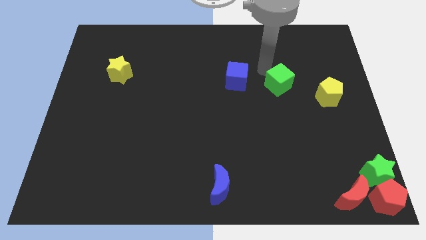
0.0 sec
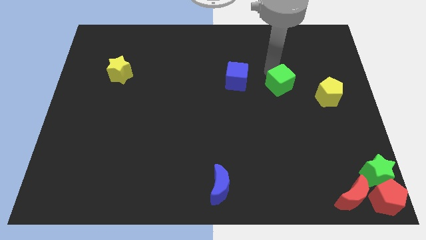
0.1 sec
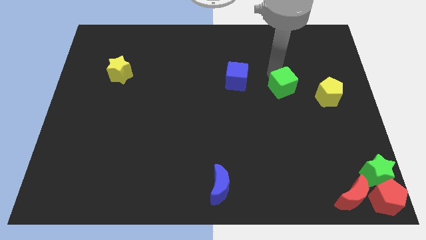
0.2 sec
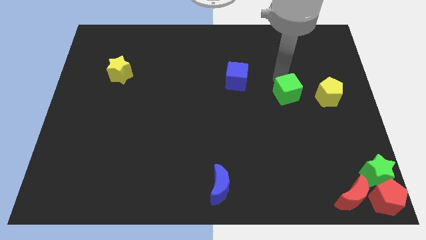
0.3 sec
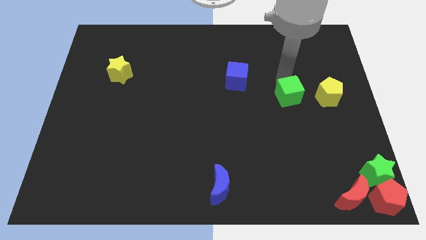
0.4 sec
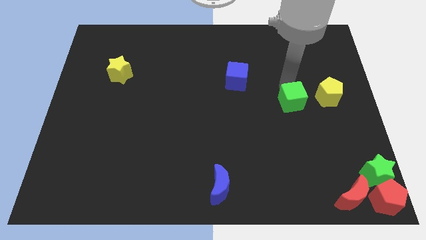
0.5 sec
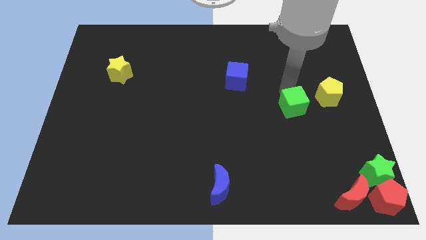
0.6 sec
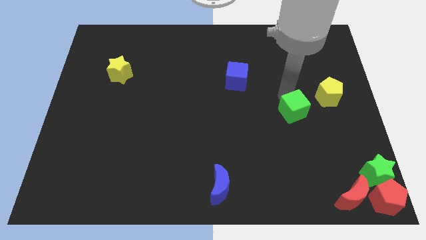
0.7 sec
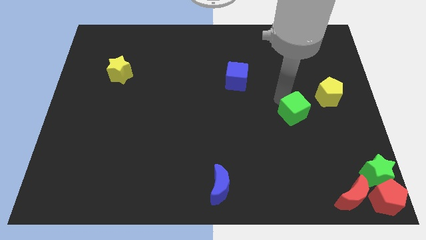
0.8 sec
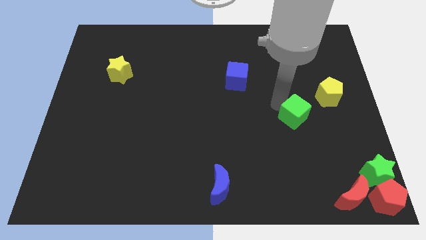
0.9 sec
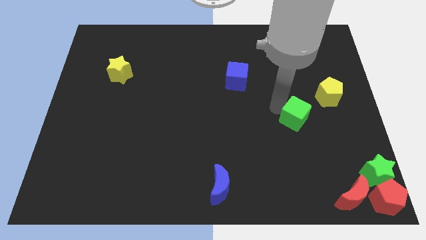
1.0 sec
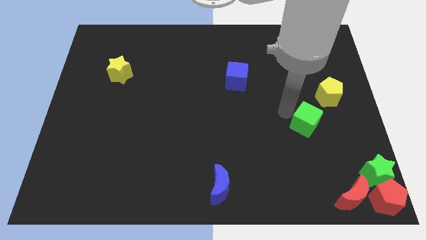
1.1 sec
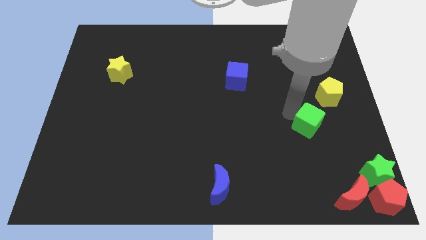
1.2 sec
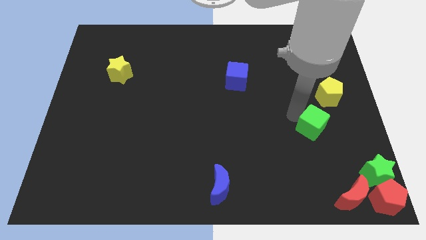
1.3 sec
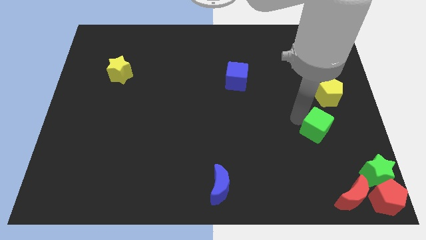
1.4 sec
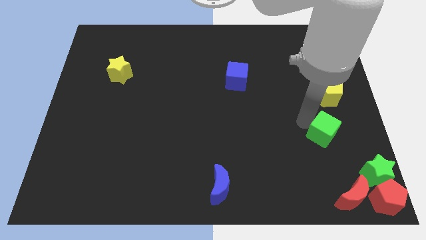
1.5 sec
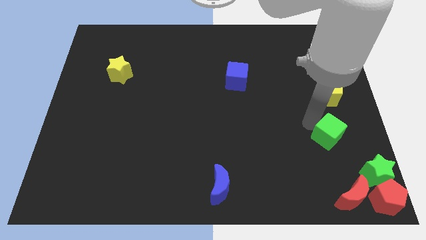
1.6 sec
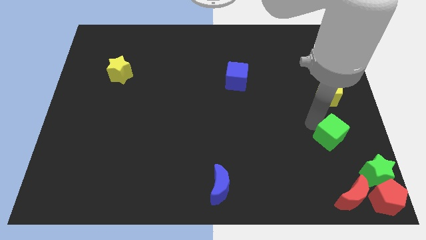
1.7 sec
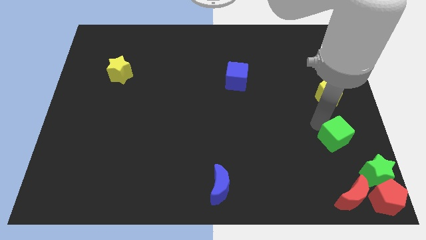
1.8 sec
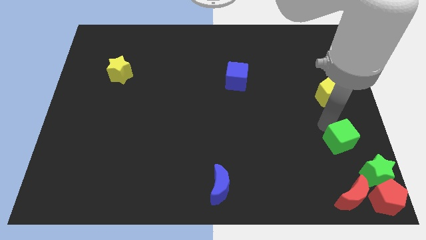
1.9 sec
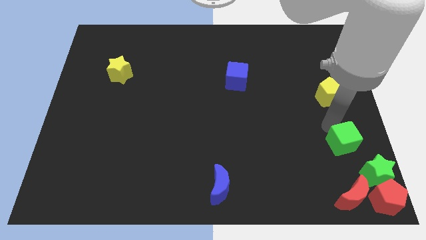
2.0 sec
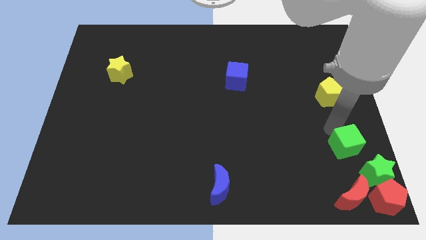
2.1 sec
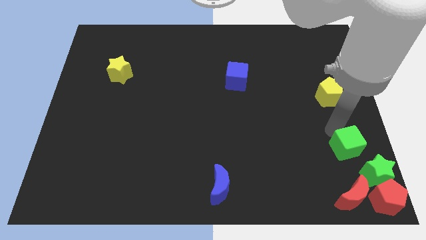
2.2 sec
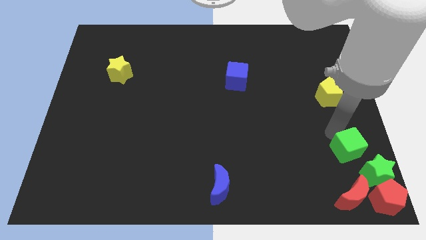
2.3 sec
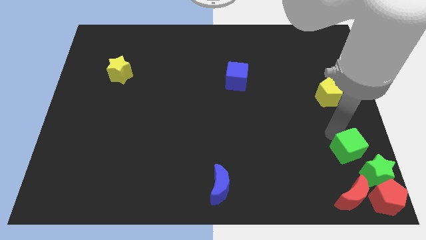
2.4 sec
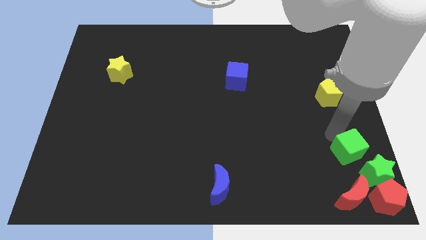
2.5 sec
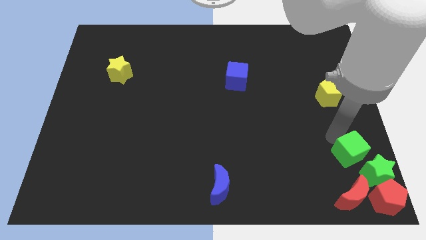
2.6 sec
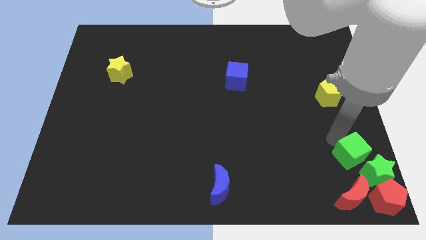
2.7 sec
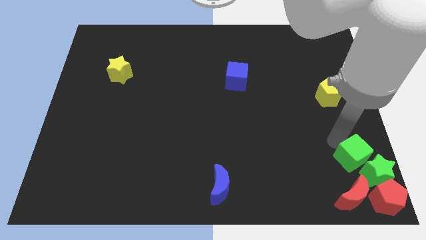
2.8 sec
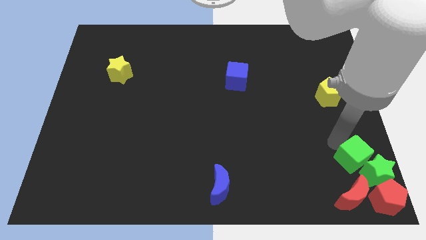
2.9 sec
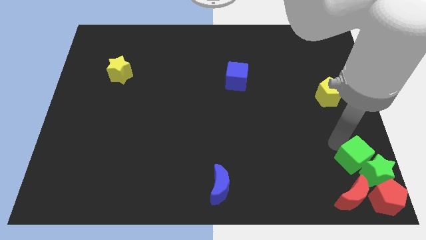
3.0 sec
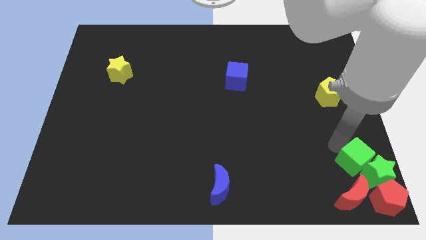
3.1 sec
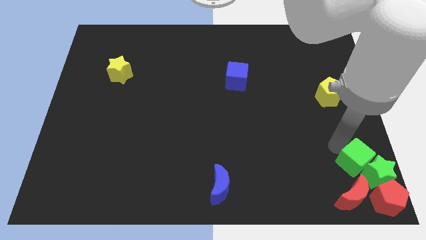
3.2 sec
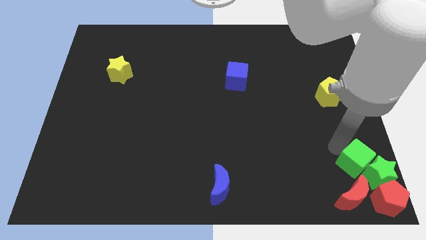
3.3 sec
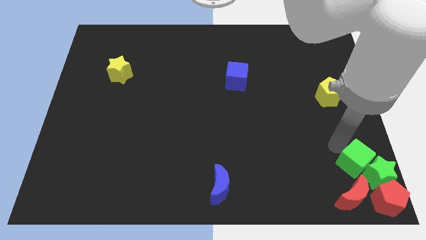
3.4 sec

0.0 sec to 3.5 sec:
push the green cube into the top of the green star

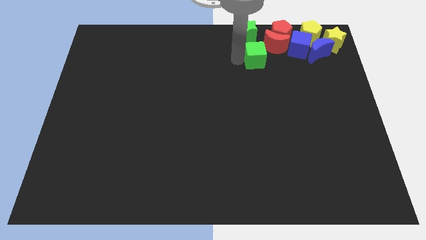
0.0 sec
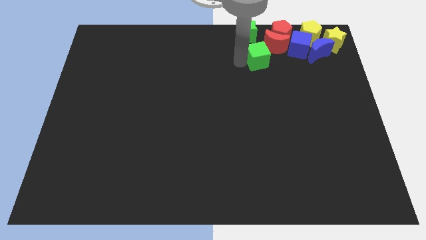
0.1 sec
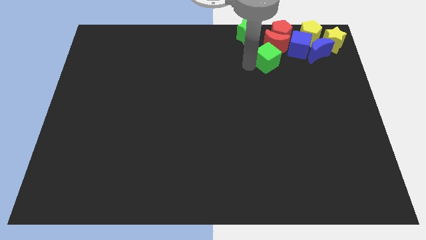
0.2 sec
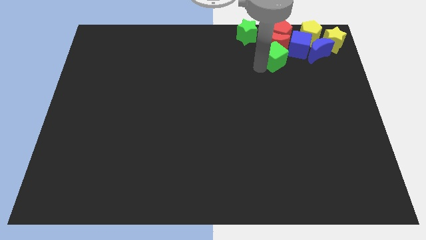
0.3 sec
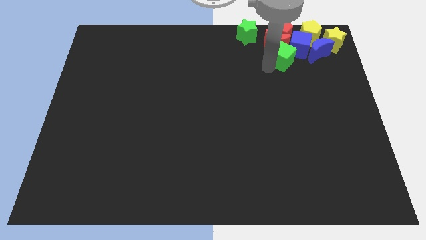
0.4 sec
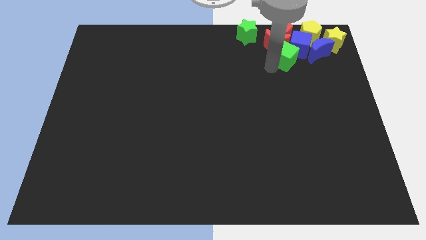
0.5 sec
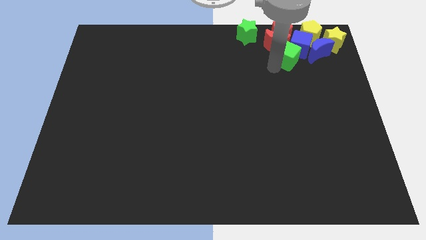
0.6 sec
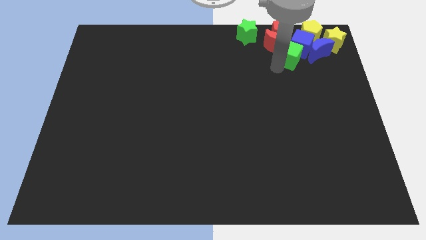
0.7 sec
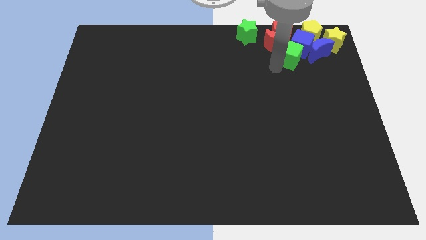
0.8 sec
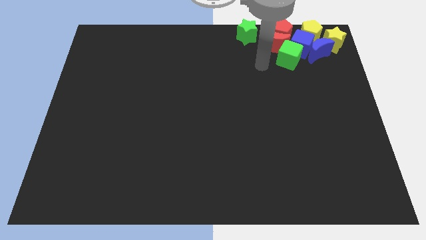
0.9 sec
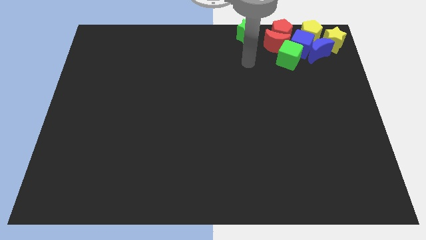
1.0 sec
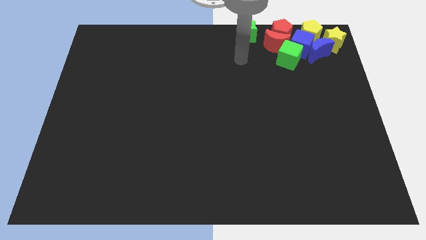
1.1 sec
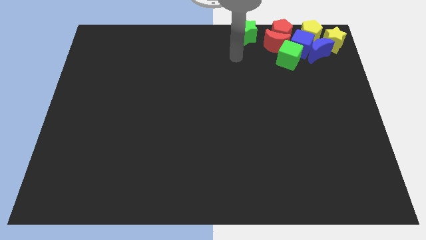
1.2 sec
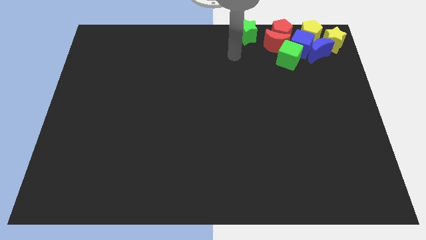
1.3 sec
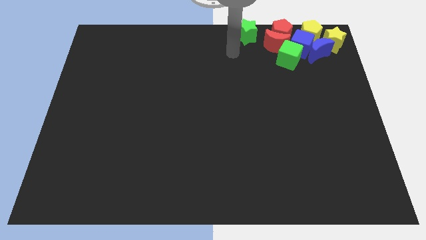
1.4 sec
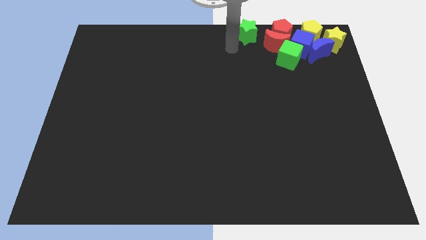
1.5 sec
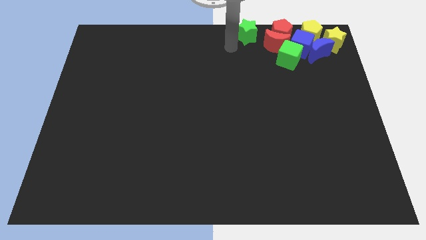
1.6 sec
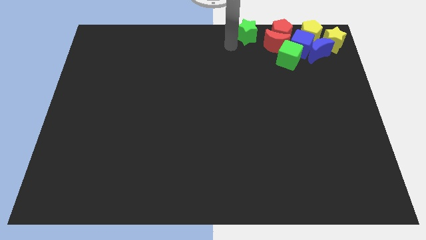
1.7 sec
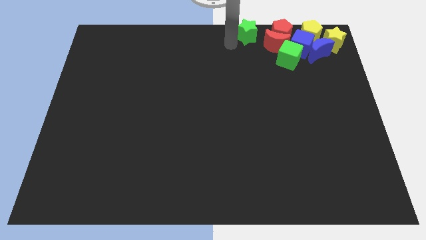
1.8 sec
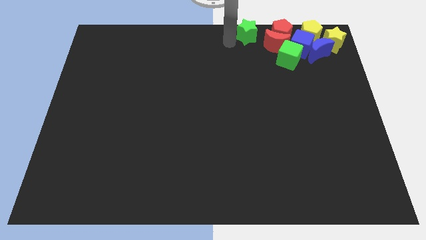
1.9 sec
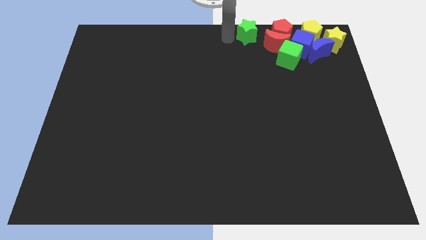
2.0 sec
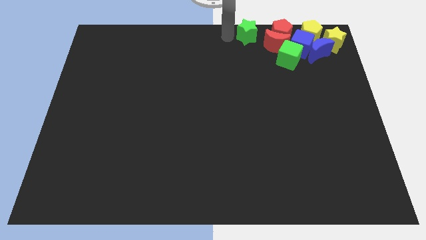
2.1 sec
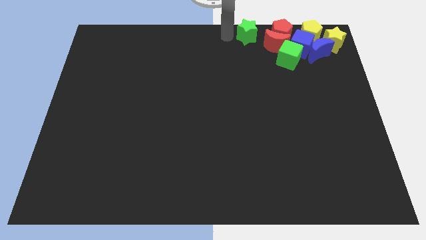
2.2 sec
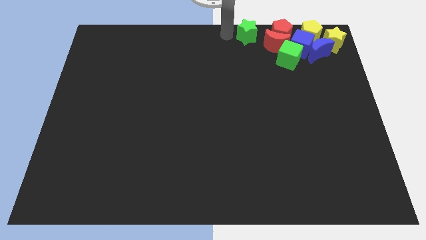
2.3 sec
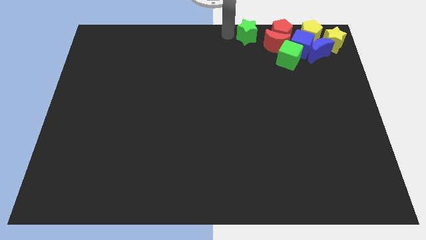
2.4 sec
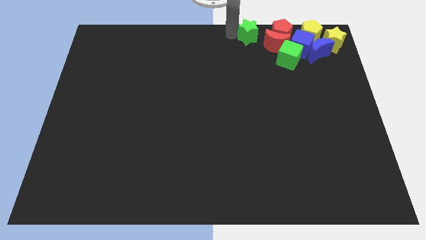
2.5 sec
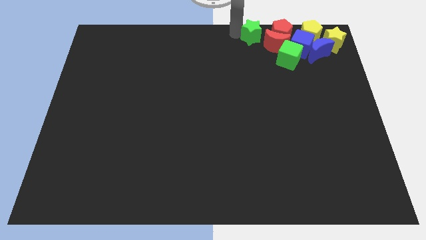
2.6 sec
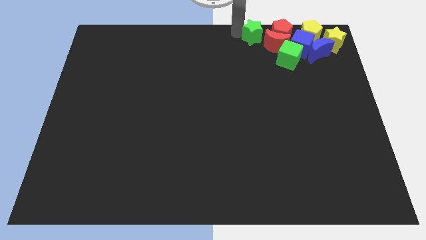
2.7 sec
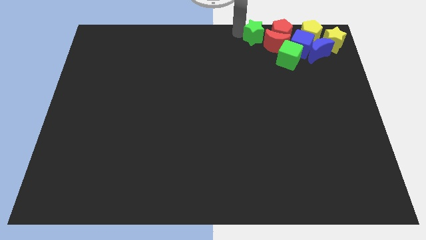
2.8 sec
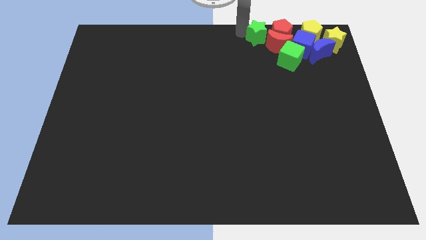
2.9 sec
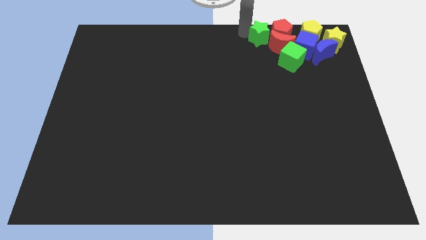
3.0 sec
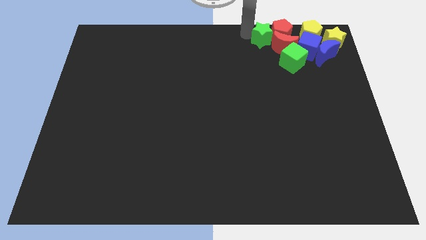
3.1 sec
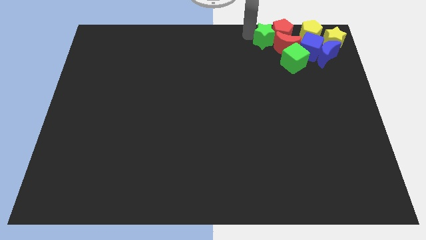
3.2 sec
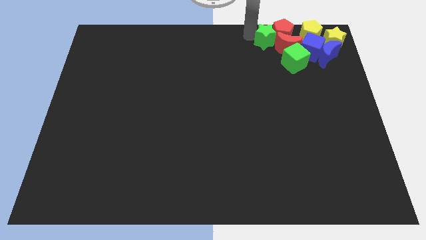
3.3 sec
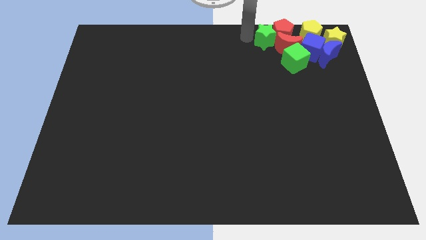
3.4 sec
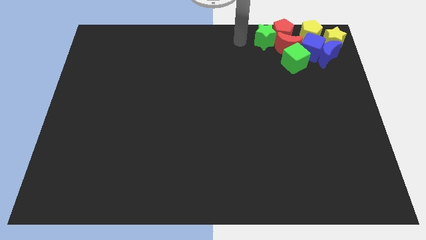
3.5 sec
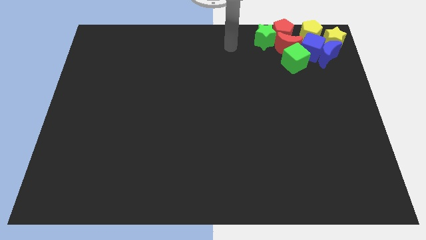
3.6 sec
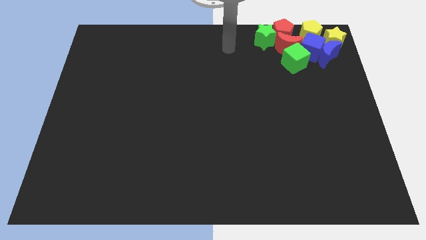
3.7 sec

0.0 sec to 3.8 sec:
push the green cube towards the bottom of the red moon

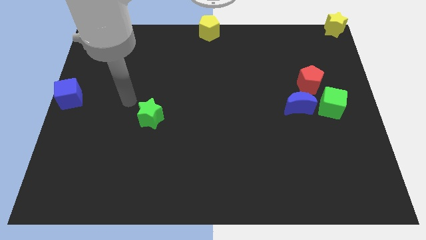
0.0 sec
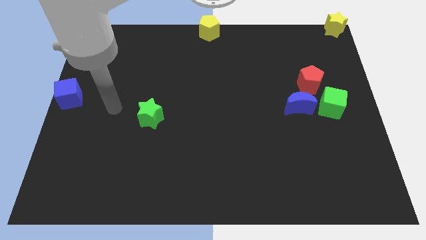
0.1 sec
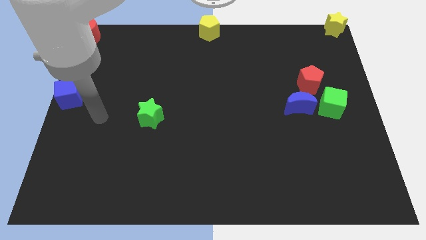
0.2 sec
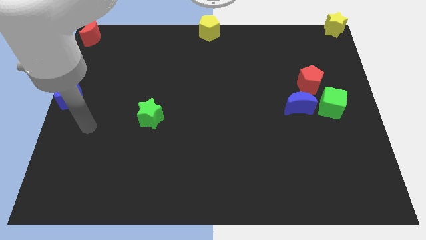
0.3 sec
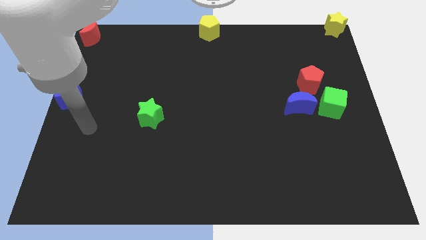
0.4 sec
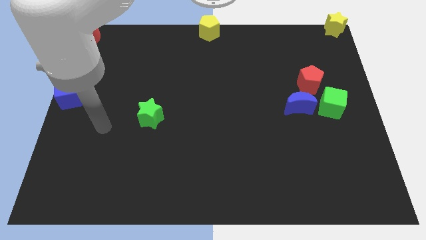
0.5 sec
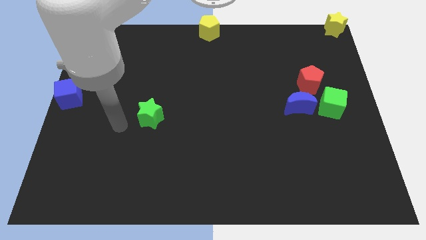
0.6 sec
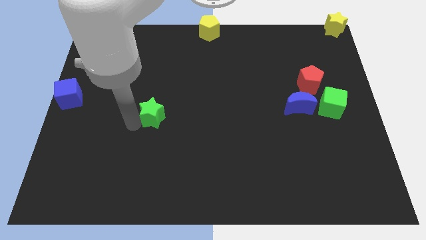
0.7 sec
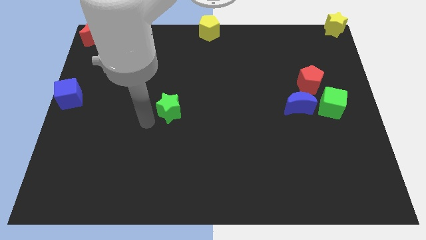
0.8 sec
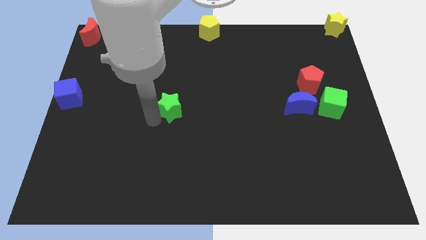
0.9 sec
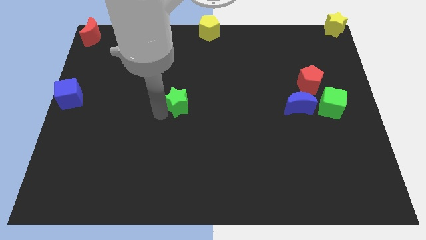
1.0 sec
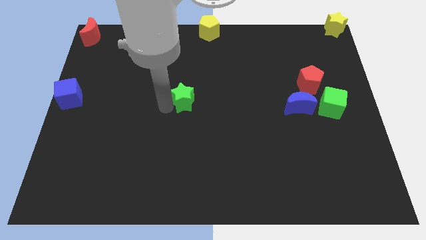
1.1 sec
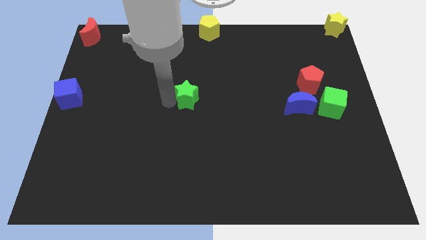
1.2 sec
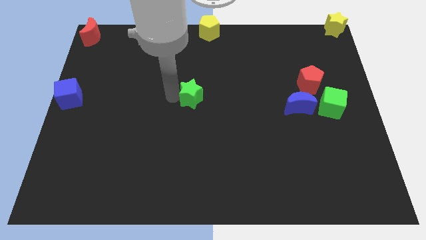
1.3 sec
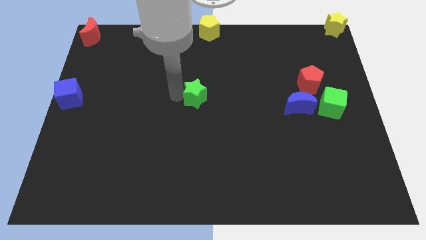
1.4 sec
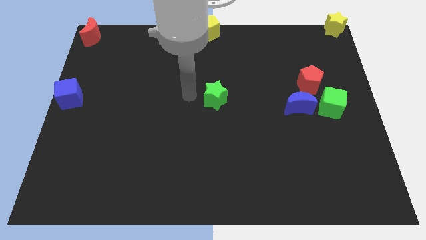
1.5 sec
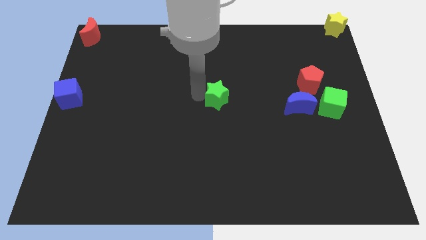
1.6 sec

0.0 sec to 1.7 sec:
push the green star at the center of the board
